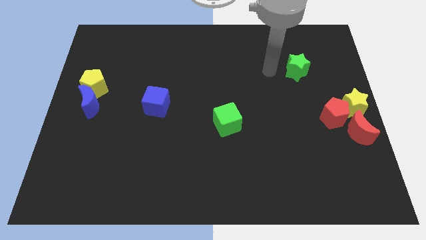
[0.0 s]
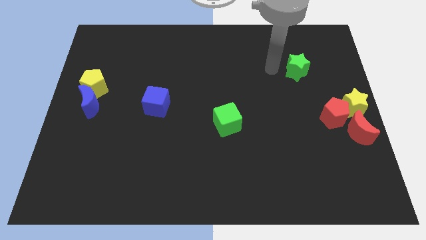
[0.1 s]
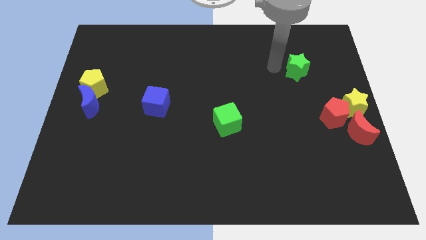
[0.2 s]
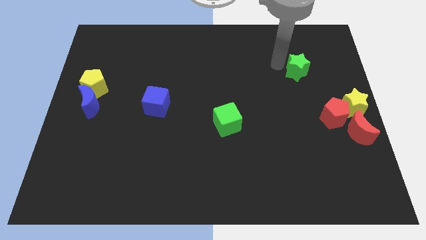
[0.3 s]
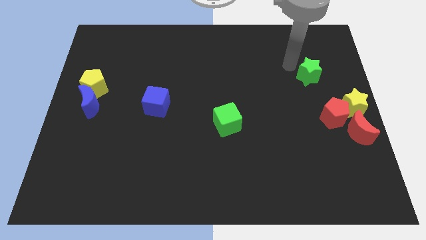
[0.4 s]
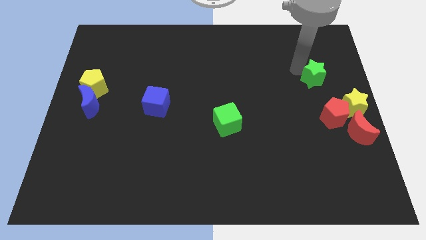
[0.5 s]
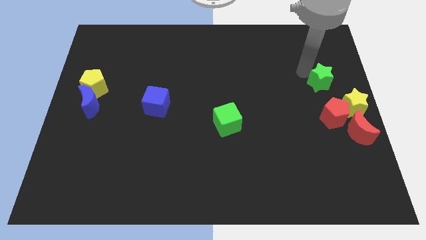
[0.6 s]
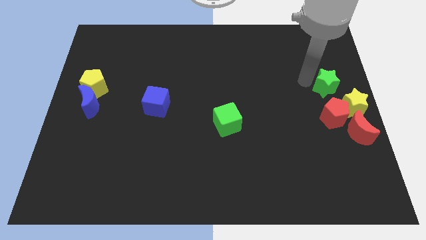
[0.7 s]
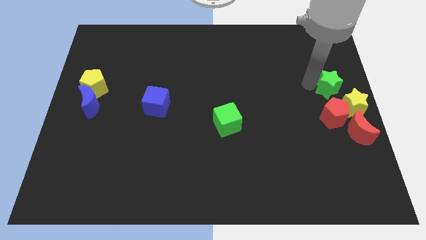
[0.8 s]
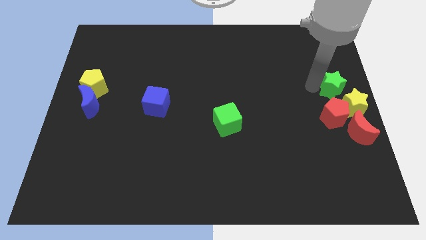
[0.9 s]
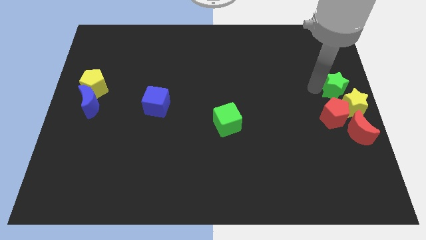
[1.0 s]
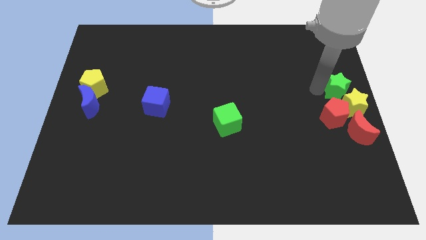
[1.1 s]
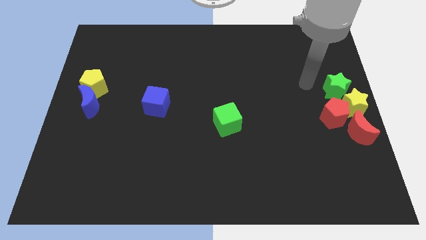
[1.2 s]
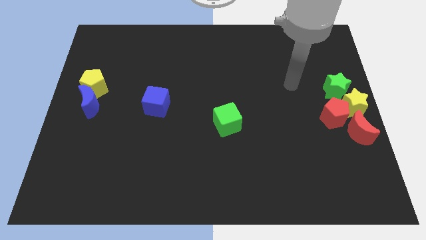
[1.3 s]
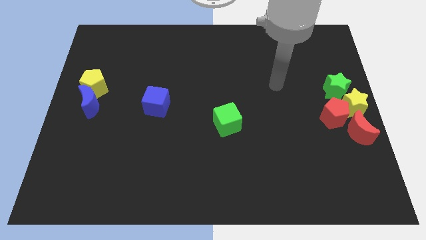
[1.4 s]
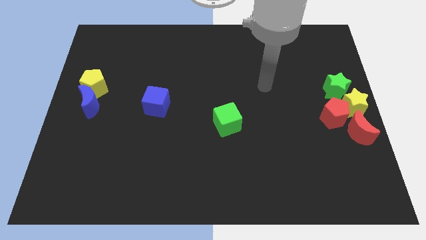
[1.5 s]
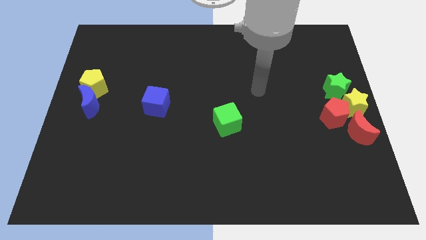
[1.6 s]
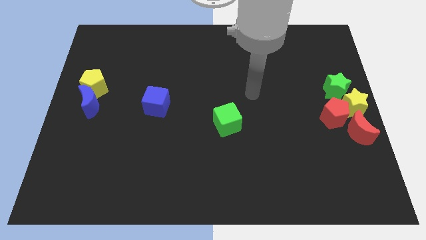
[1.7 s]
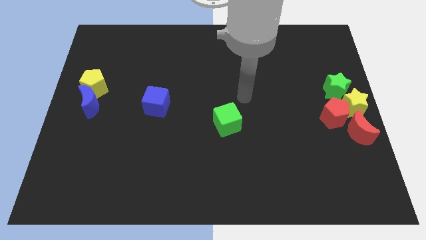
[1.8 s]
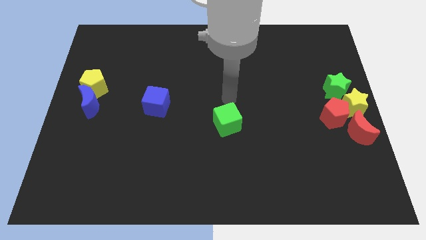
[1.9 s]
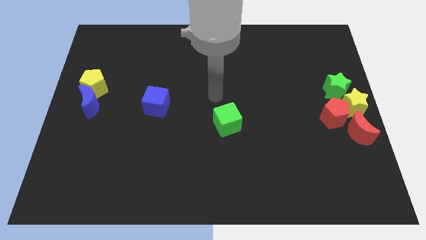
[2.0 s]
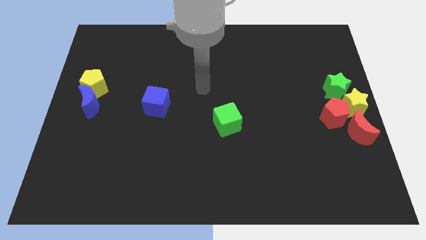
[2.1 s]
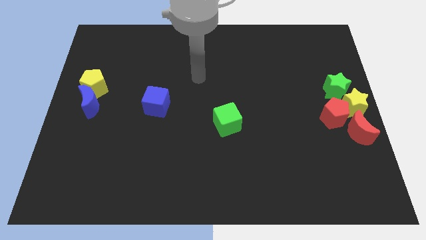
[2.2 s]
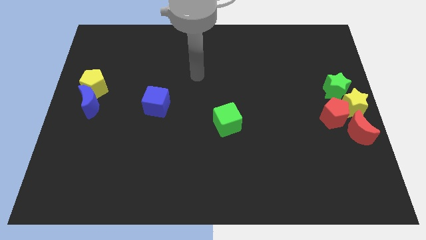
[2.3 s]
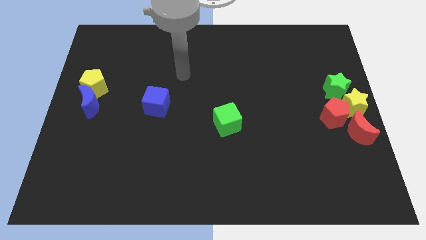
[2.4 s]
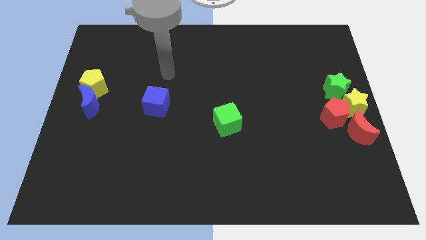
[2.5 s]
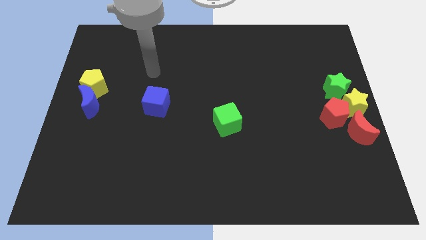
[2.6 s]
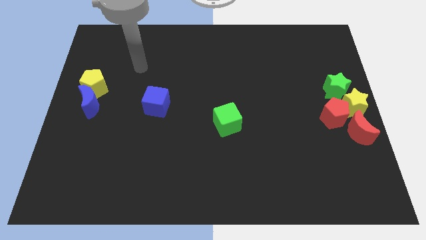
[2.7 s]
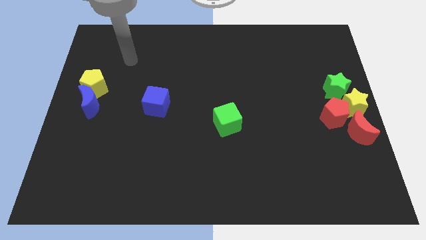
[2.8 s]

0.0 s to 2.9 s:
push the green star close to the yellow star

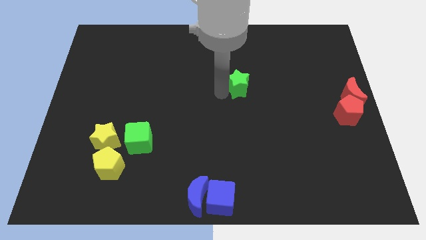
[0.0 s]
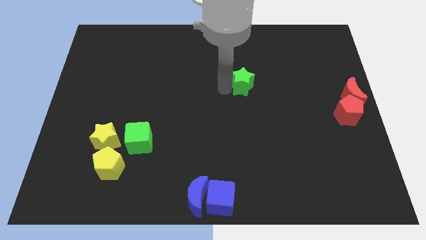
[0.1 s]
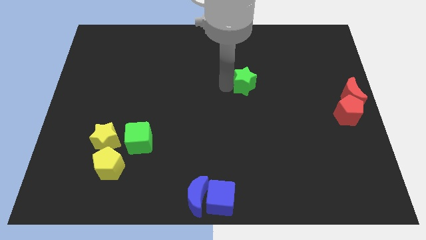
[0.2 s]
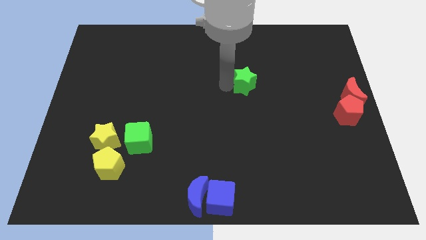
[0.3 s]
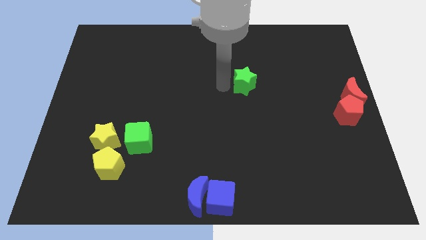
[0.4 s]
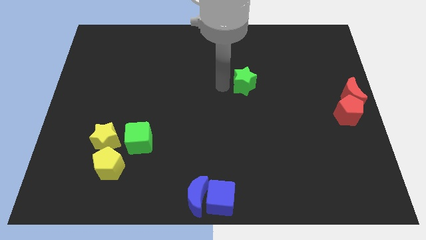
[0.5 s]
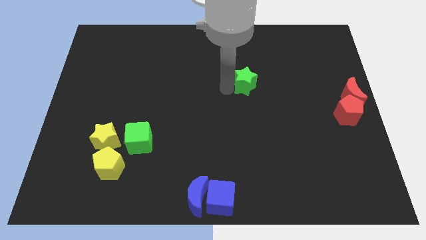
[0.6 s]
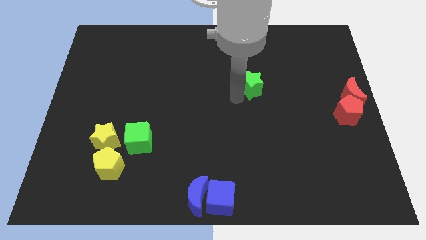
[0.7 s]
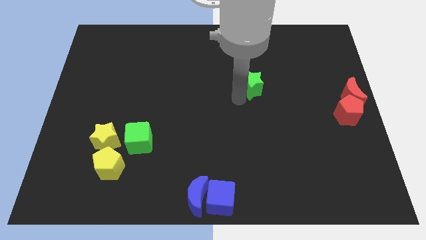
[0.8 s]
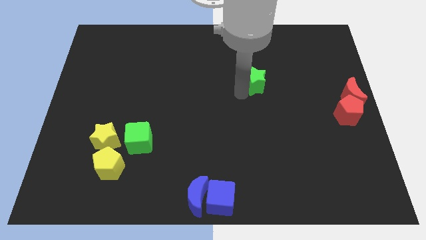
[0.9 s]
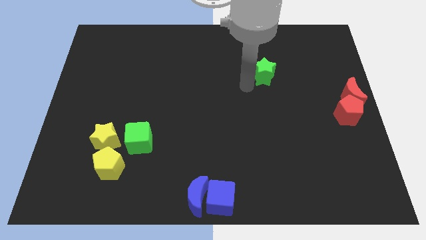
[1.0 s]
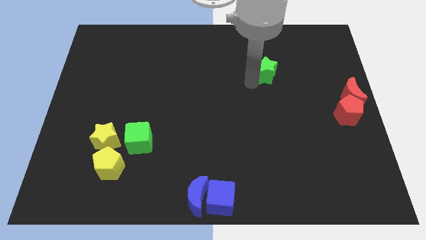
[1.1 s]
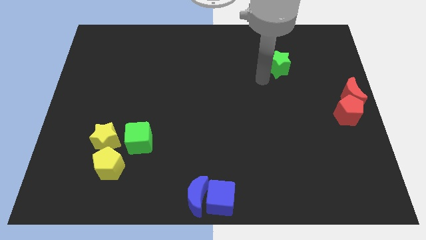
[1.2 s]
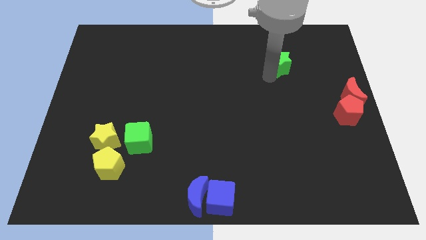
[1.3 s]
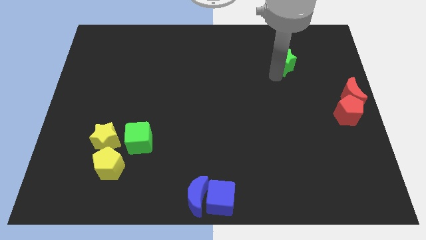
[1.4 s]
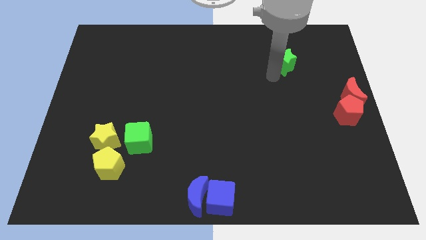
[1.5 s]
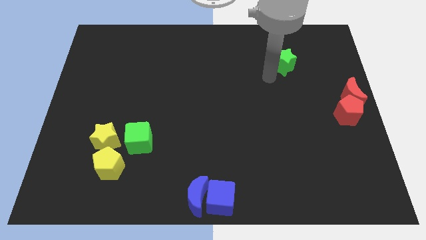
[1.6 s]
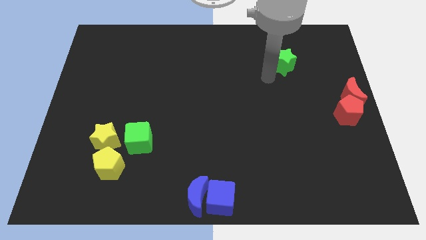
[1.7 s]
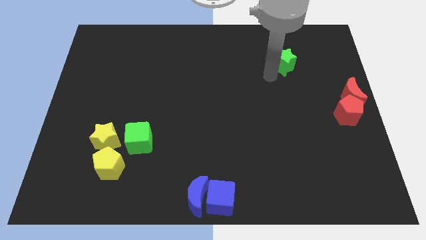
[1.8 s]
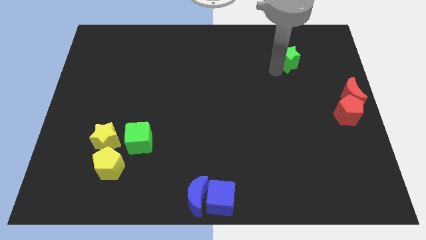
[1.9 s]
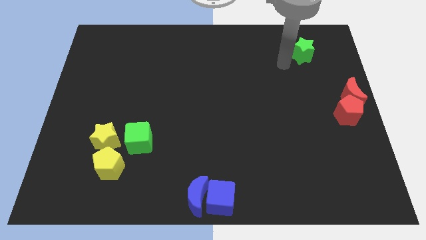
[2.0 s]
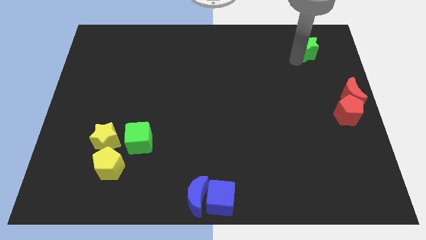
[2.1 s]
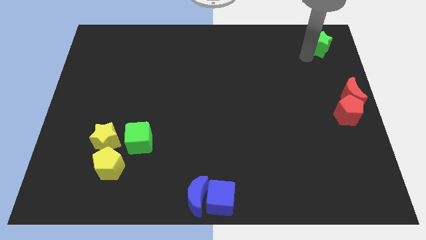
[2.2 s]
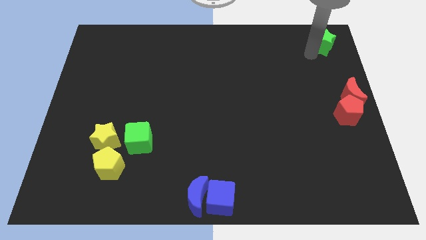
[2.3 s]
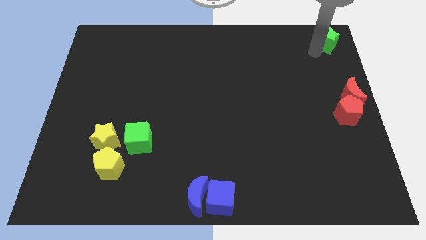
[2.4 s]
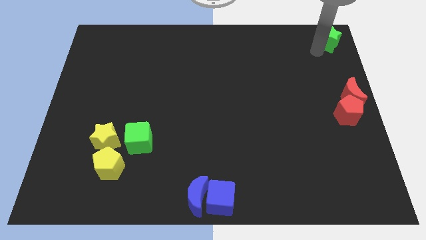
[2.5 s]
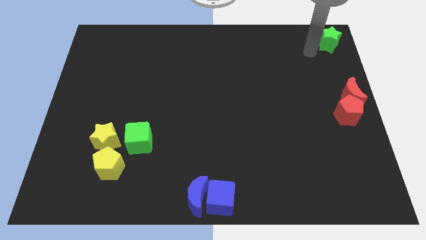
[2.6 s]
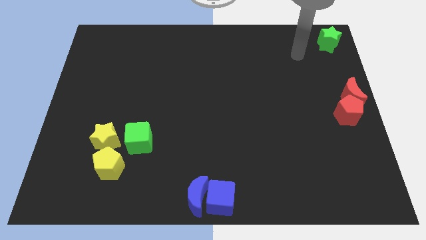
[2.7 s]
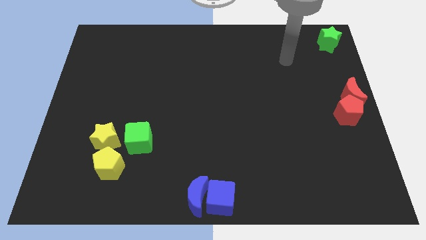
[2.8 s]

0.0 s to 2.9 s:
drag green star towards top right side of the board

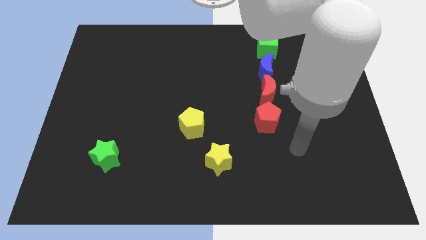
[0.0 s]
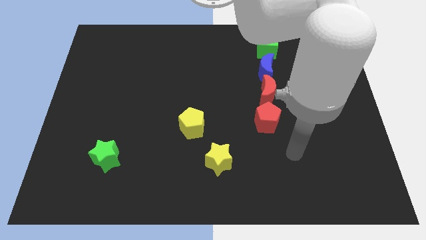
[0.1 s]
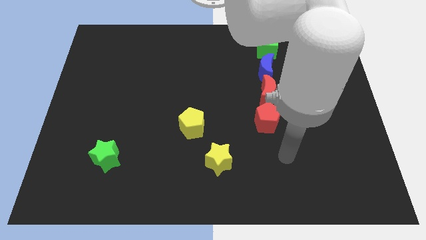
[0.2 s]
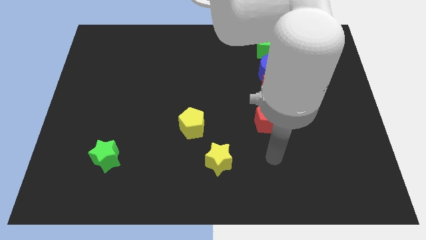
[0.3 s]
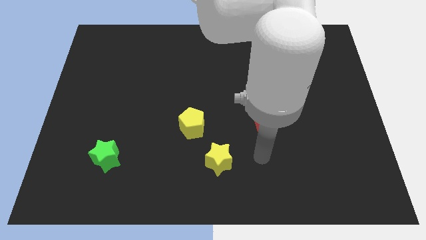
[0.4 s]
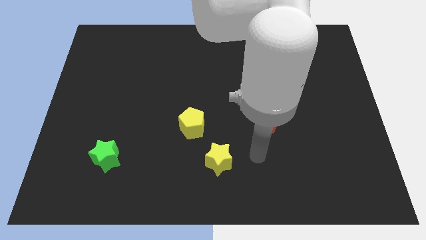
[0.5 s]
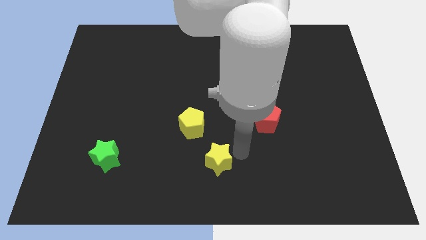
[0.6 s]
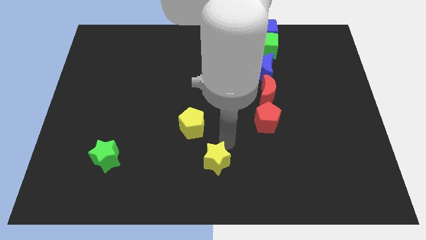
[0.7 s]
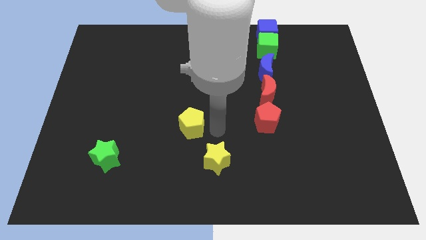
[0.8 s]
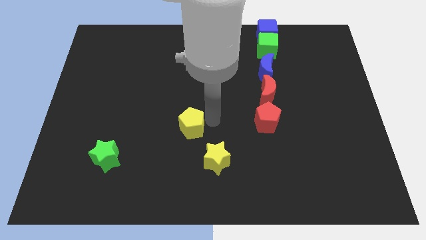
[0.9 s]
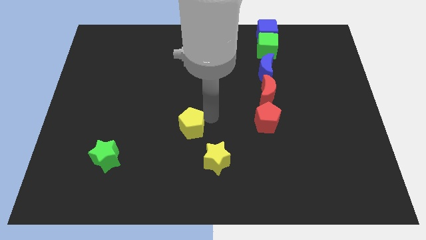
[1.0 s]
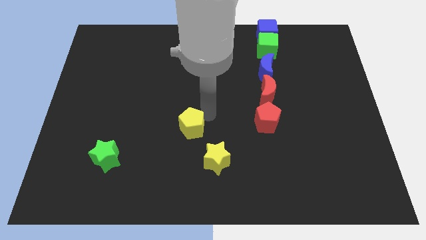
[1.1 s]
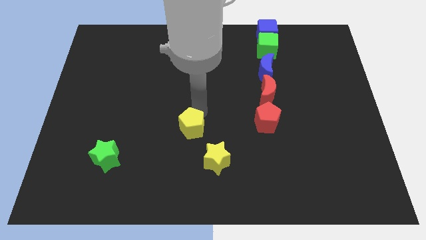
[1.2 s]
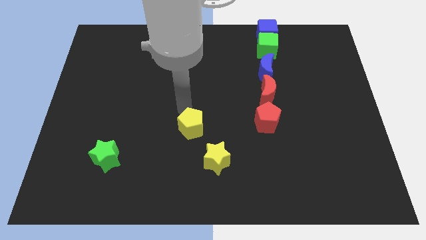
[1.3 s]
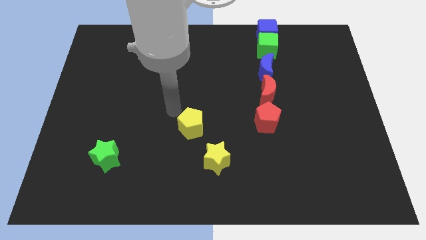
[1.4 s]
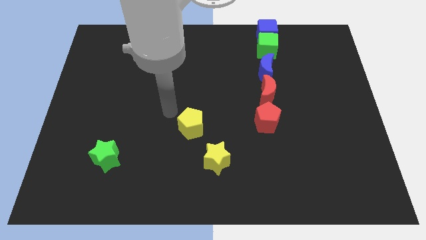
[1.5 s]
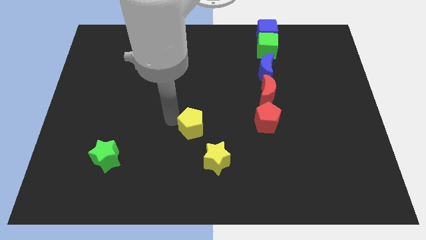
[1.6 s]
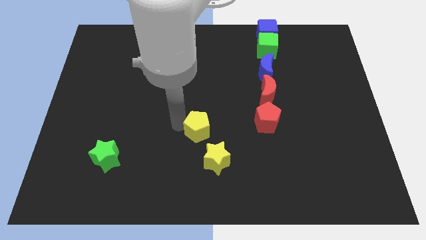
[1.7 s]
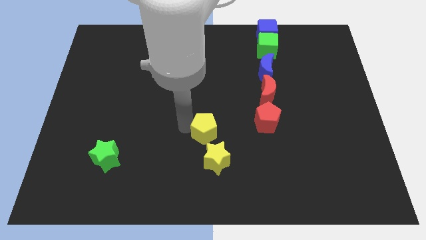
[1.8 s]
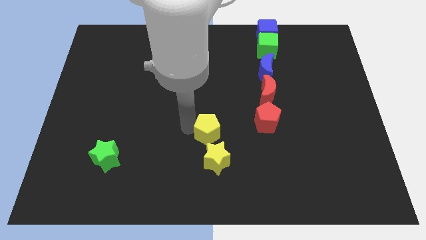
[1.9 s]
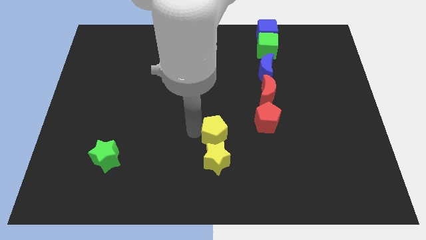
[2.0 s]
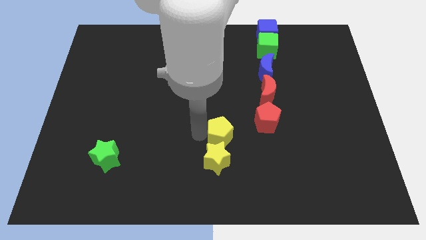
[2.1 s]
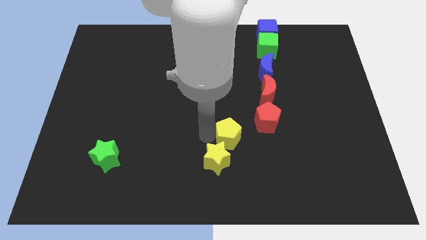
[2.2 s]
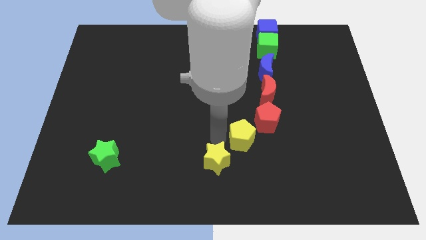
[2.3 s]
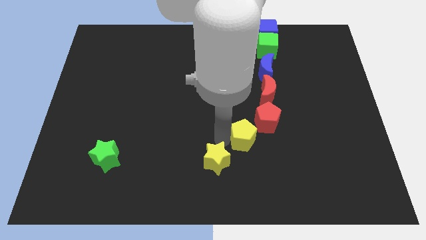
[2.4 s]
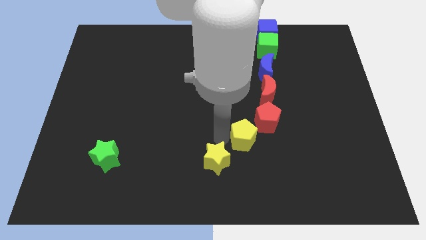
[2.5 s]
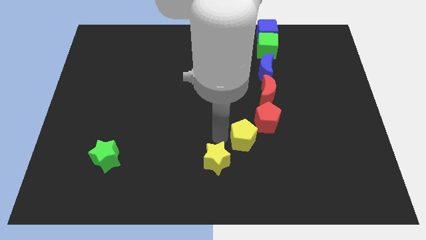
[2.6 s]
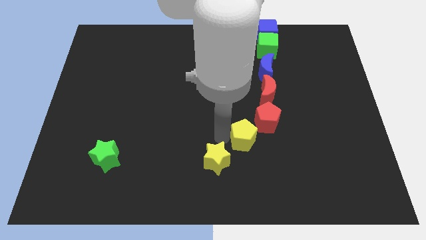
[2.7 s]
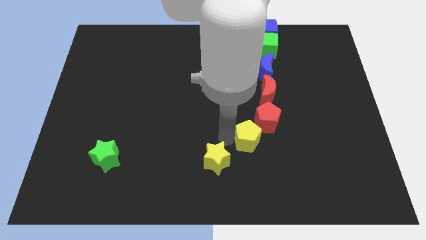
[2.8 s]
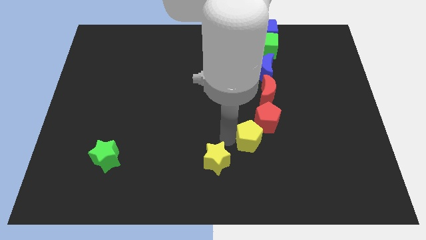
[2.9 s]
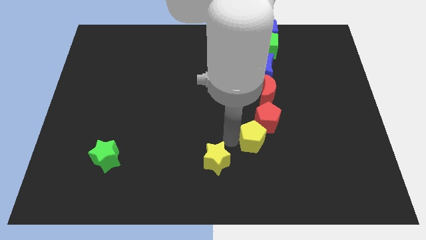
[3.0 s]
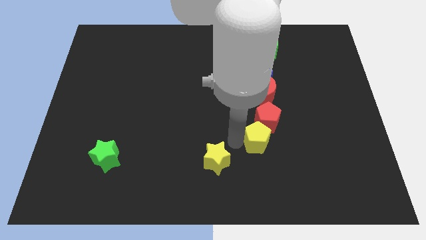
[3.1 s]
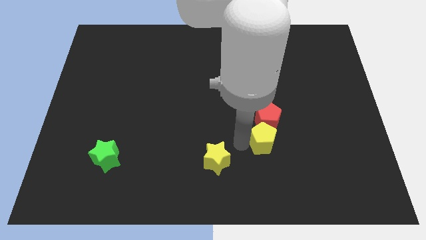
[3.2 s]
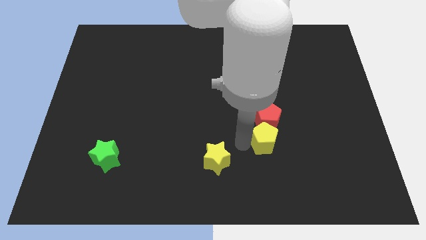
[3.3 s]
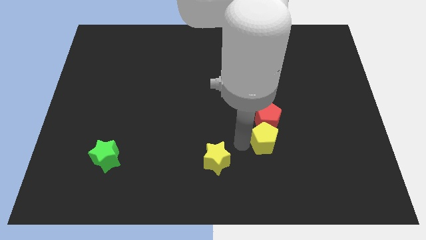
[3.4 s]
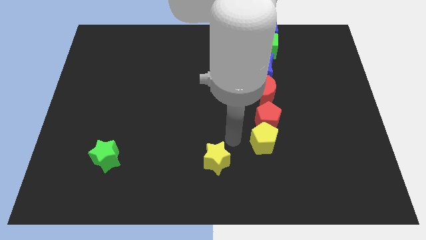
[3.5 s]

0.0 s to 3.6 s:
place the yellow pentagon below the red pentagon
